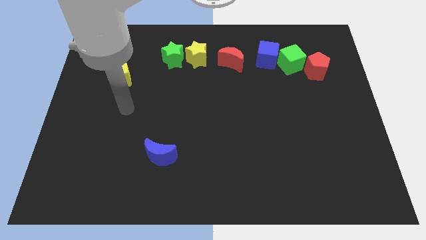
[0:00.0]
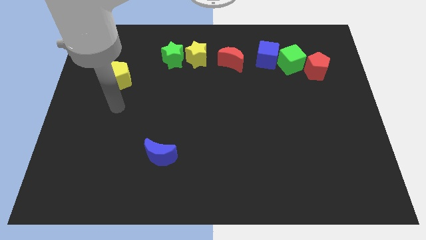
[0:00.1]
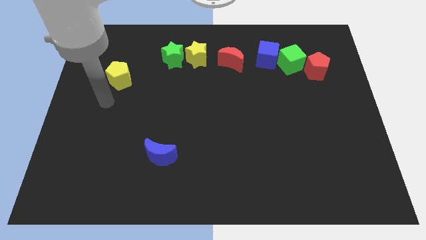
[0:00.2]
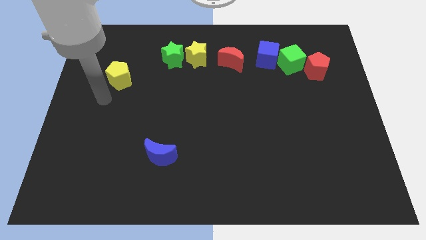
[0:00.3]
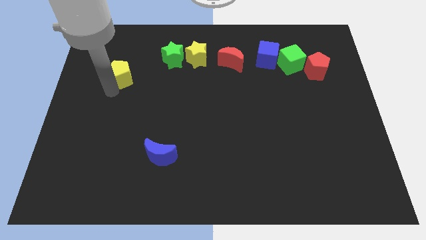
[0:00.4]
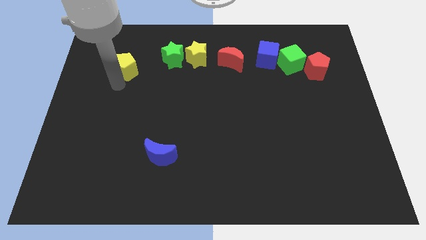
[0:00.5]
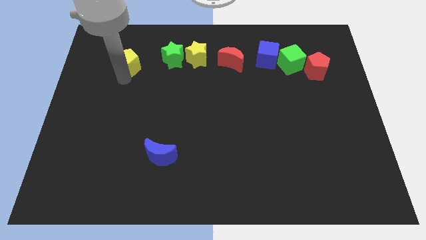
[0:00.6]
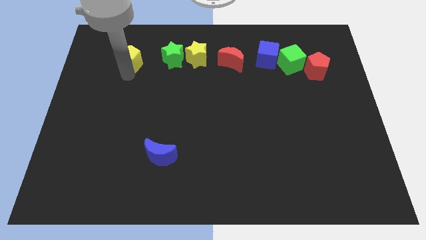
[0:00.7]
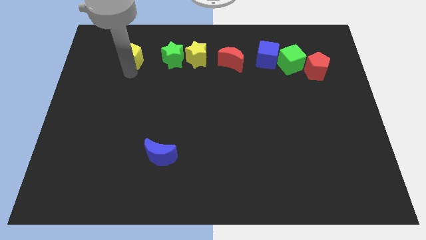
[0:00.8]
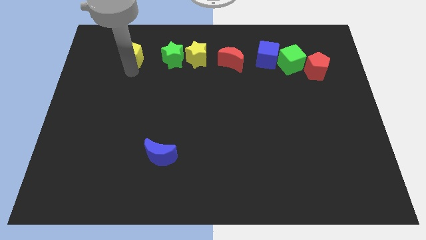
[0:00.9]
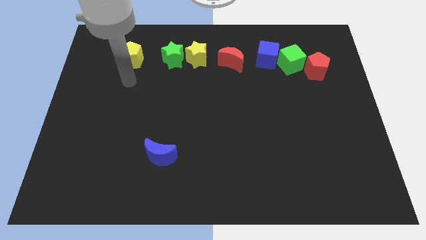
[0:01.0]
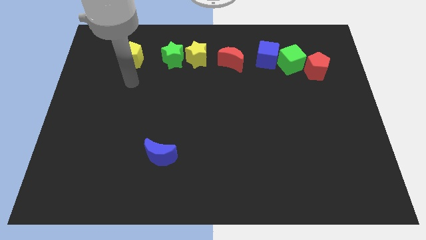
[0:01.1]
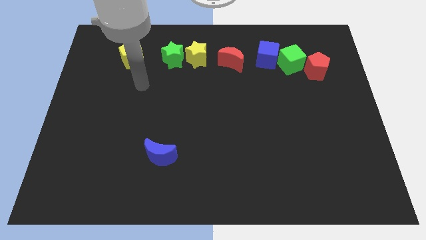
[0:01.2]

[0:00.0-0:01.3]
move the yellow pentagon diagonal to the left of the green star

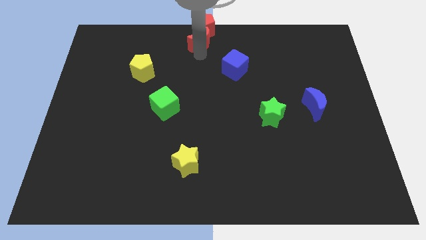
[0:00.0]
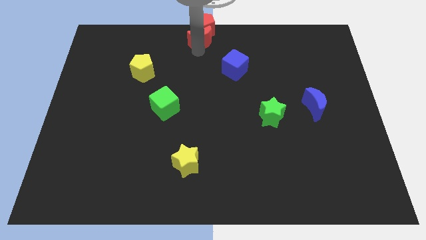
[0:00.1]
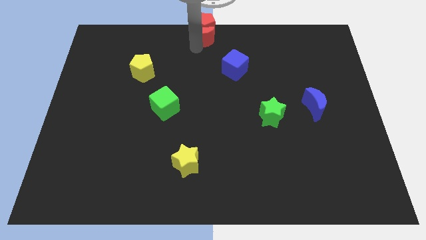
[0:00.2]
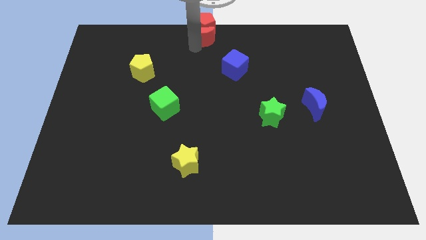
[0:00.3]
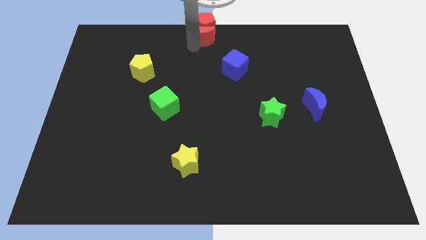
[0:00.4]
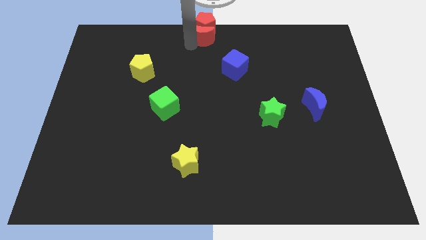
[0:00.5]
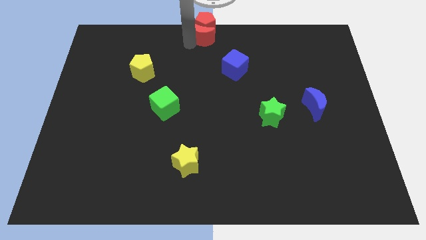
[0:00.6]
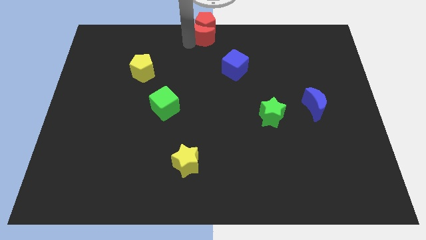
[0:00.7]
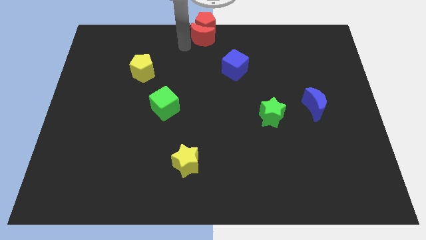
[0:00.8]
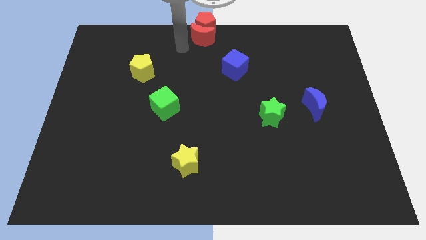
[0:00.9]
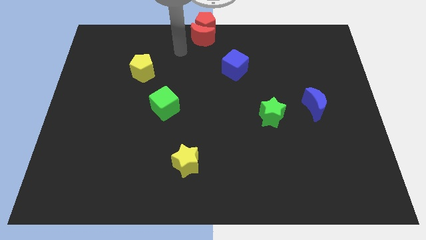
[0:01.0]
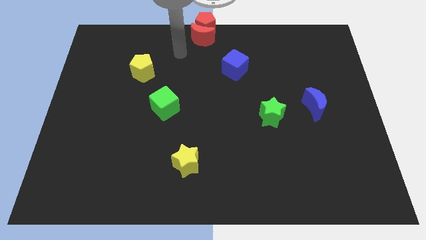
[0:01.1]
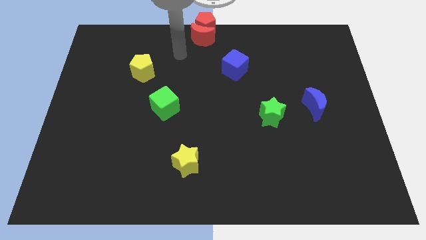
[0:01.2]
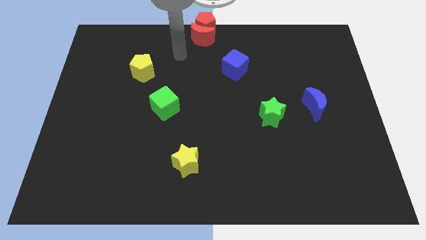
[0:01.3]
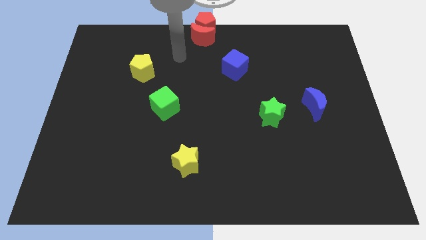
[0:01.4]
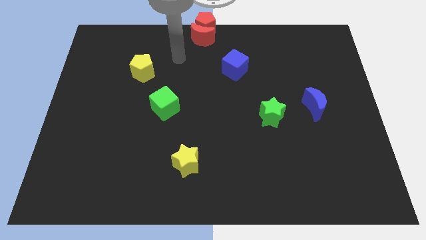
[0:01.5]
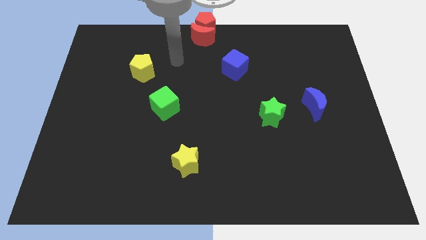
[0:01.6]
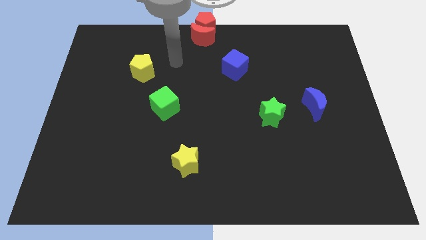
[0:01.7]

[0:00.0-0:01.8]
move your arm to the top right of the yellow pentagon

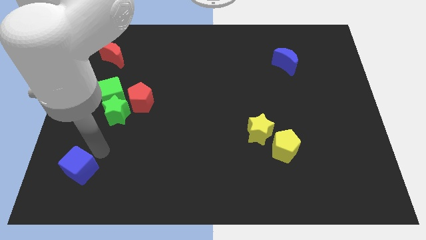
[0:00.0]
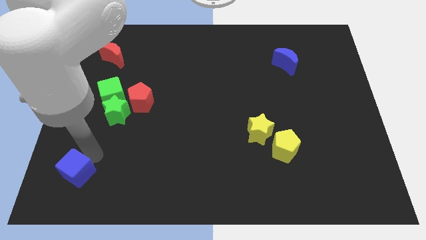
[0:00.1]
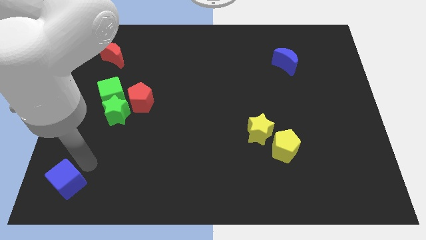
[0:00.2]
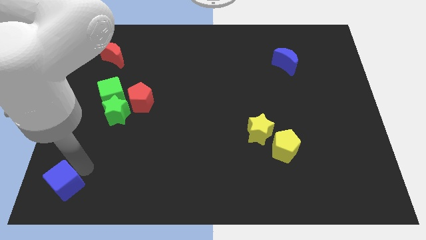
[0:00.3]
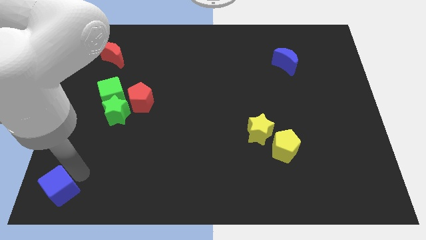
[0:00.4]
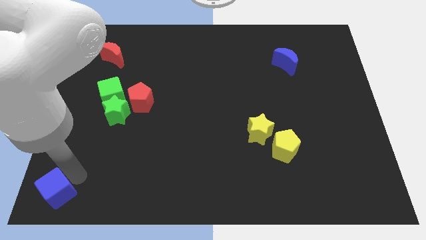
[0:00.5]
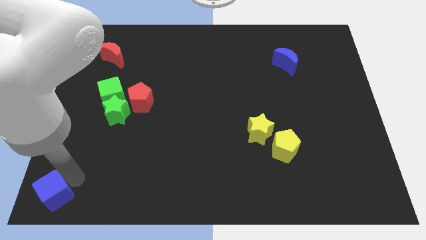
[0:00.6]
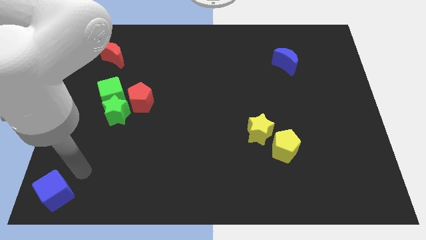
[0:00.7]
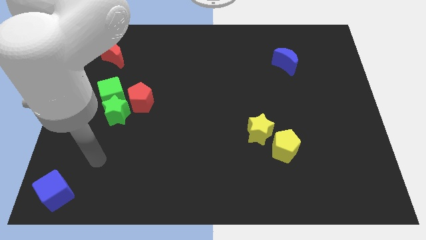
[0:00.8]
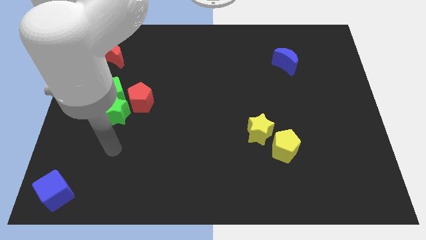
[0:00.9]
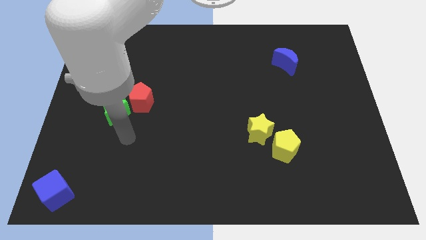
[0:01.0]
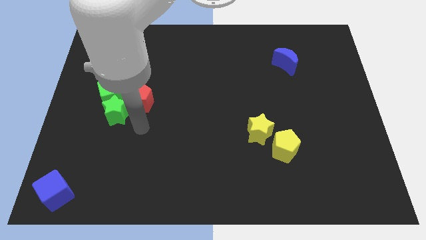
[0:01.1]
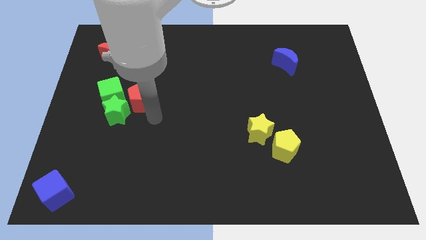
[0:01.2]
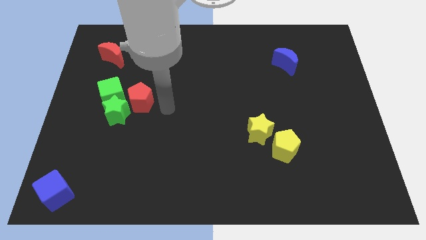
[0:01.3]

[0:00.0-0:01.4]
place the blue cube at the bottom left corner

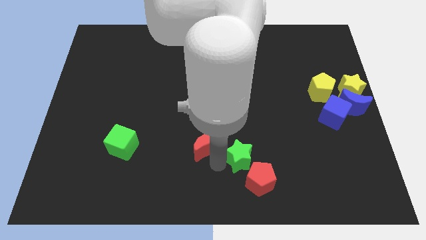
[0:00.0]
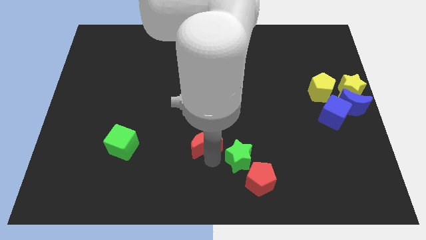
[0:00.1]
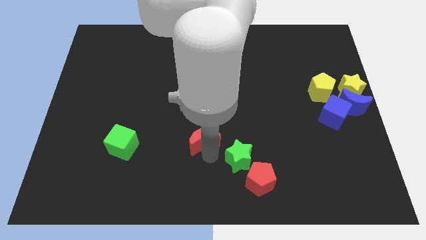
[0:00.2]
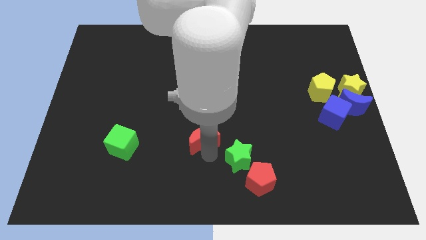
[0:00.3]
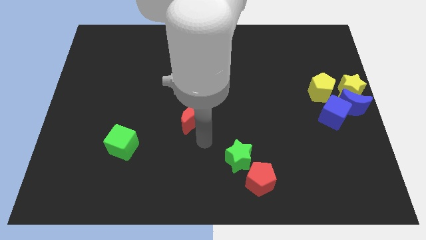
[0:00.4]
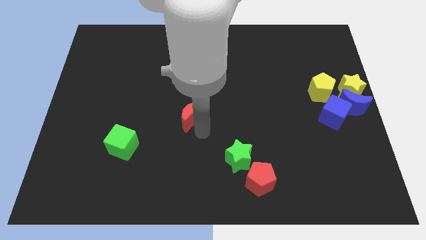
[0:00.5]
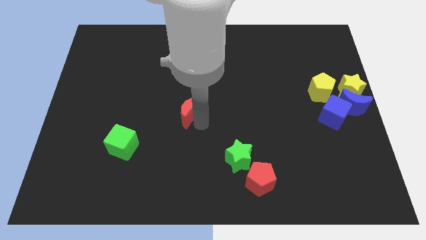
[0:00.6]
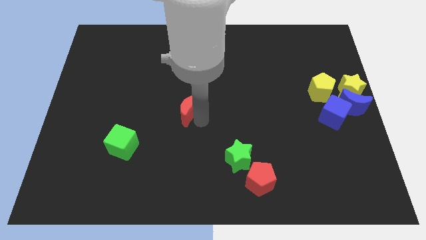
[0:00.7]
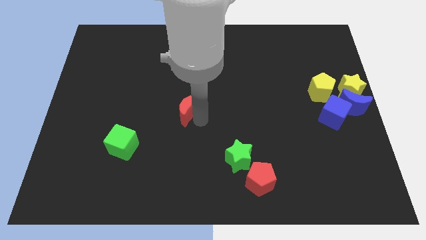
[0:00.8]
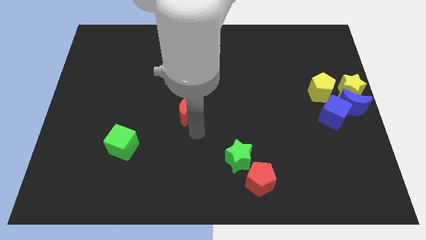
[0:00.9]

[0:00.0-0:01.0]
place the red crescent at the center of the board

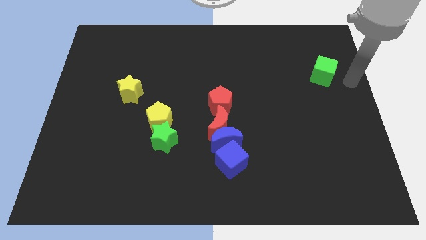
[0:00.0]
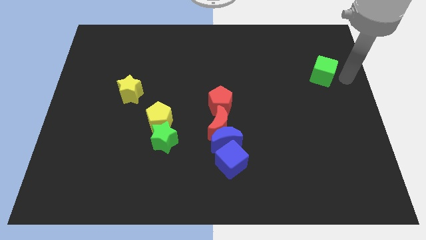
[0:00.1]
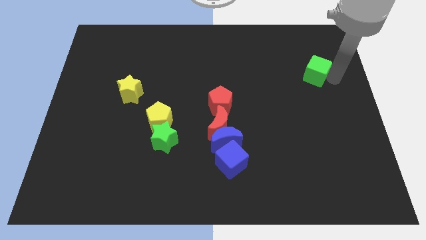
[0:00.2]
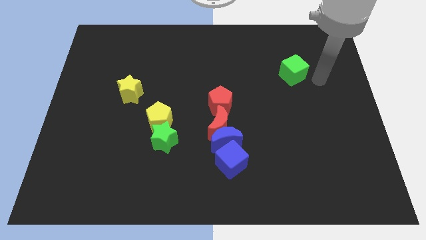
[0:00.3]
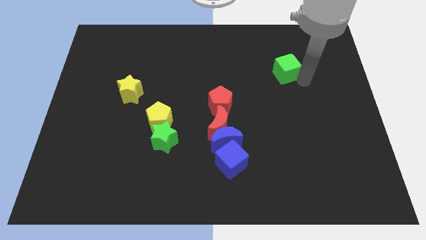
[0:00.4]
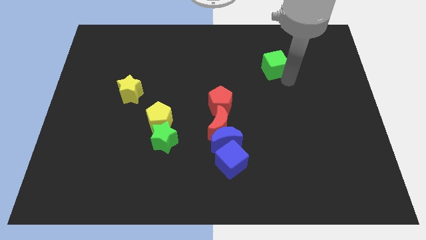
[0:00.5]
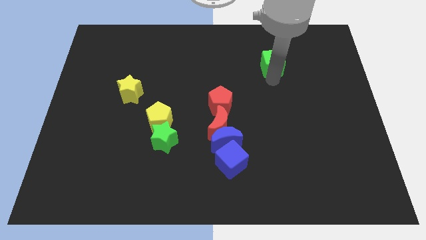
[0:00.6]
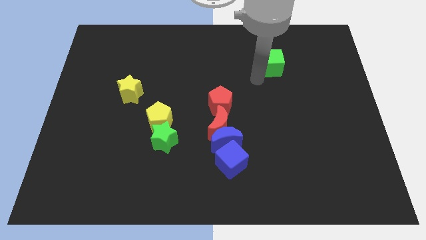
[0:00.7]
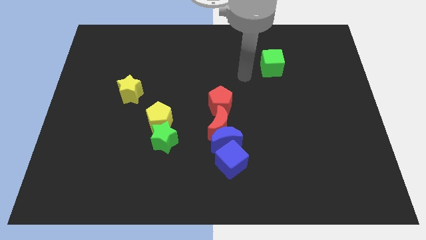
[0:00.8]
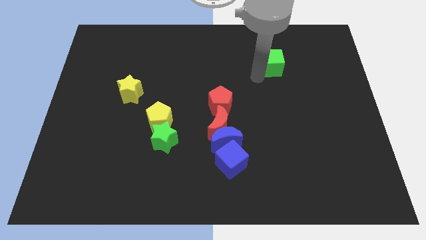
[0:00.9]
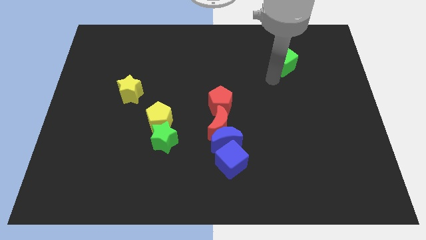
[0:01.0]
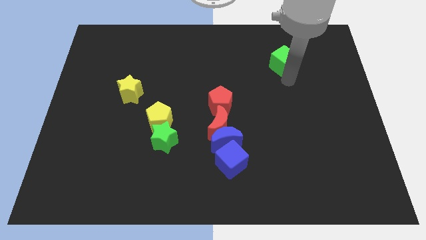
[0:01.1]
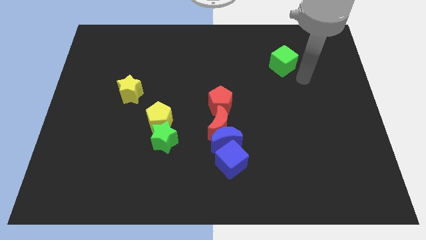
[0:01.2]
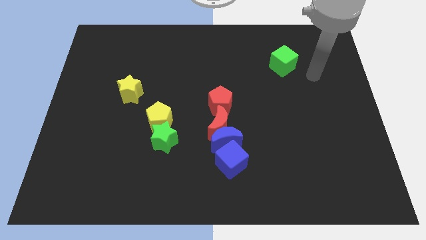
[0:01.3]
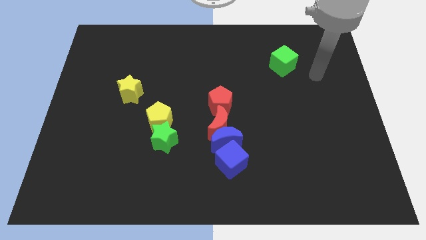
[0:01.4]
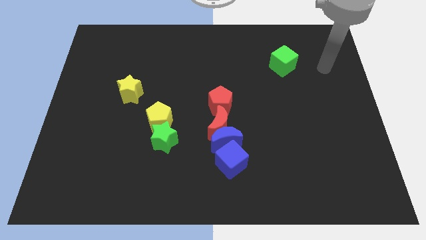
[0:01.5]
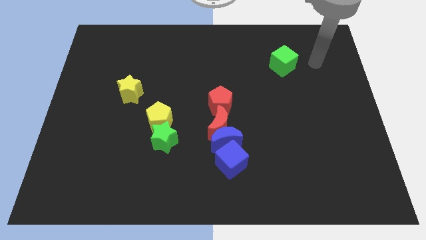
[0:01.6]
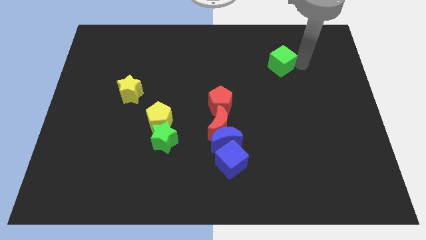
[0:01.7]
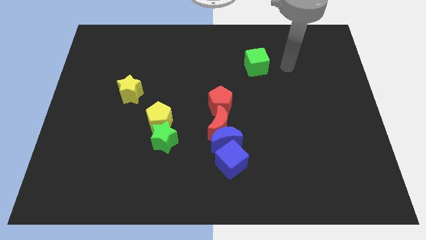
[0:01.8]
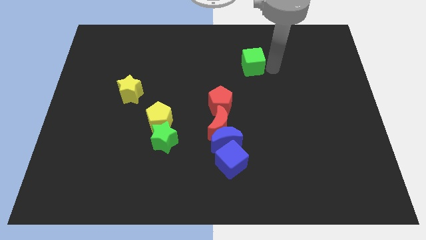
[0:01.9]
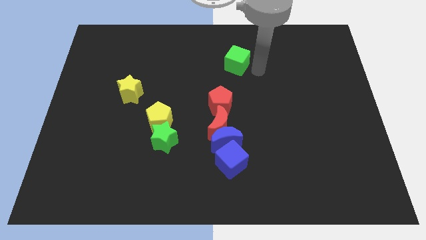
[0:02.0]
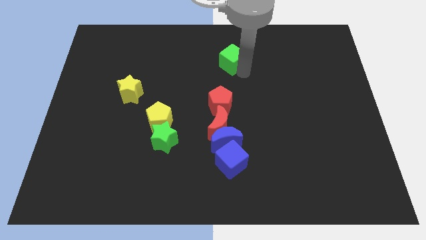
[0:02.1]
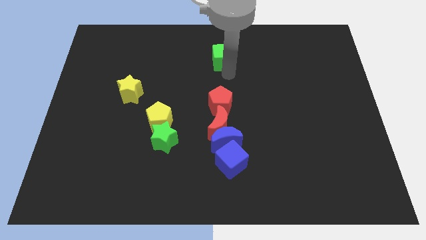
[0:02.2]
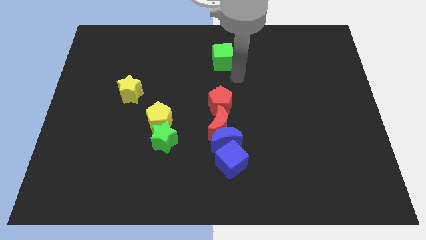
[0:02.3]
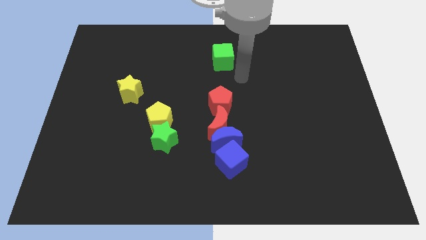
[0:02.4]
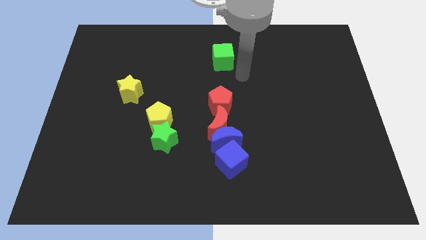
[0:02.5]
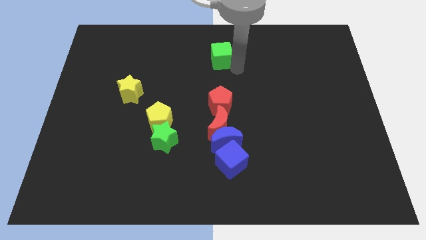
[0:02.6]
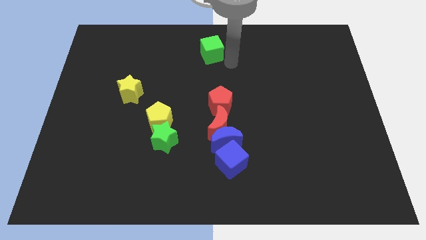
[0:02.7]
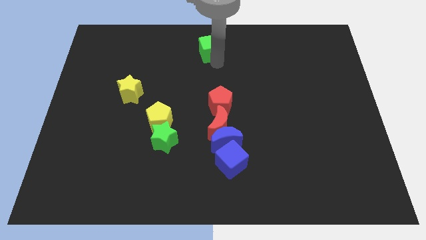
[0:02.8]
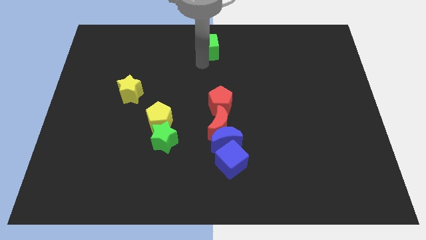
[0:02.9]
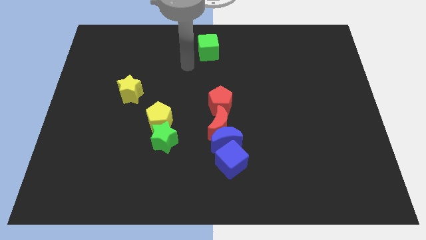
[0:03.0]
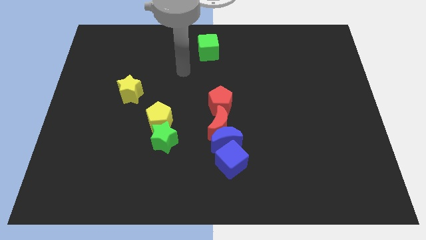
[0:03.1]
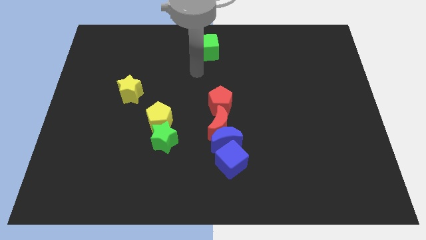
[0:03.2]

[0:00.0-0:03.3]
move the green cube to the top of the red pentagon
